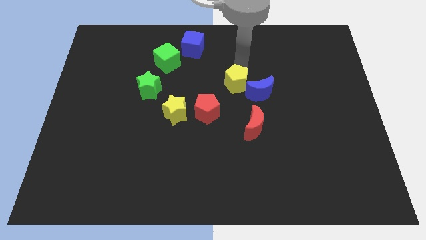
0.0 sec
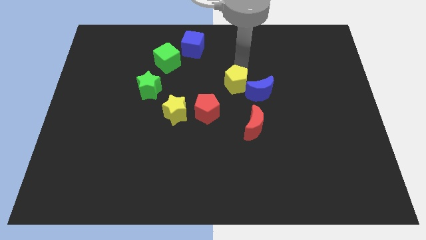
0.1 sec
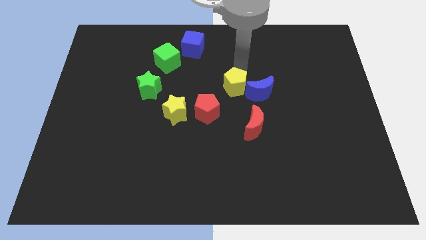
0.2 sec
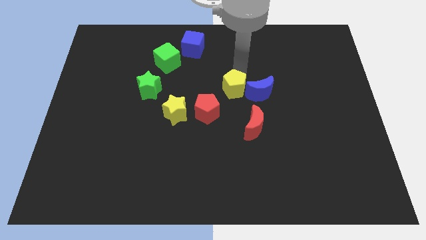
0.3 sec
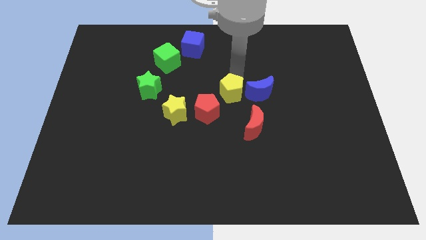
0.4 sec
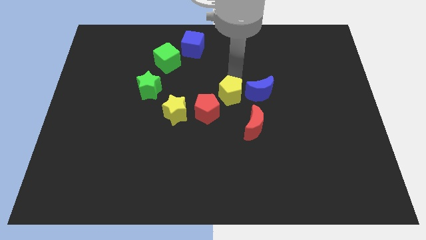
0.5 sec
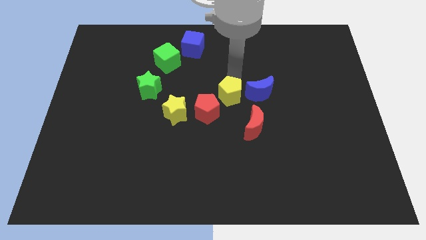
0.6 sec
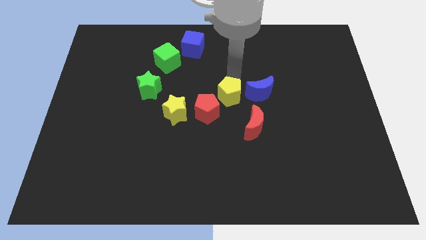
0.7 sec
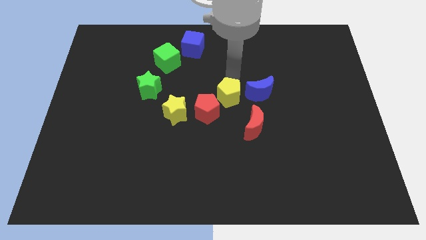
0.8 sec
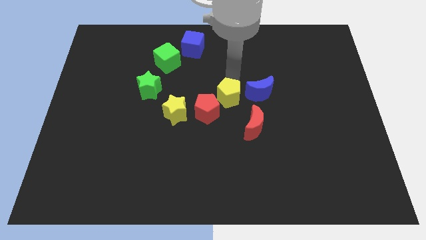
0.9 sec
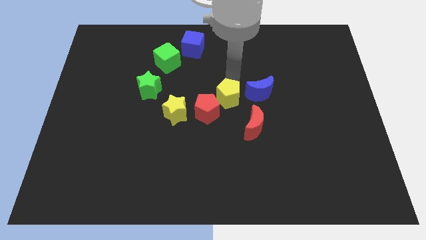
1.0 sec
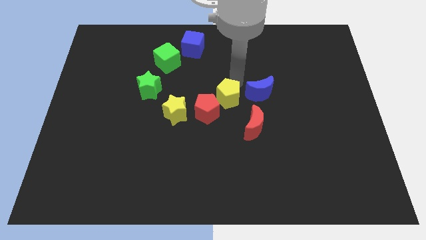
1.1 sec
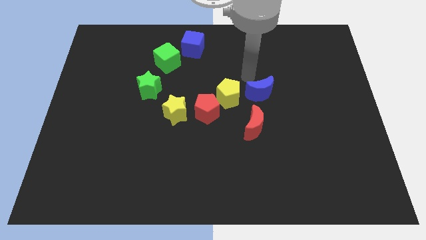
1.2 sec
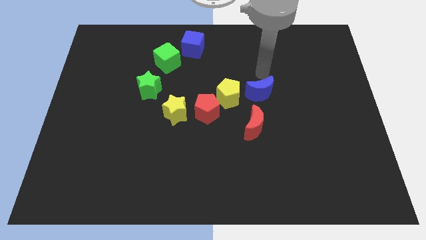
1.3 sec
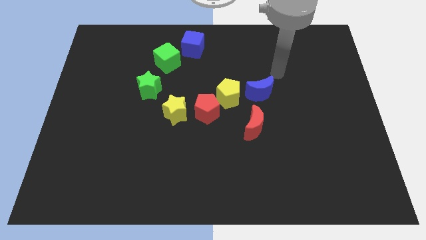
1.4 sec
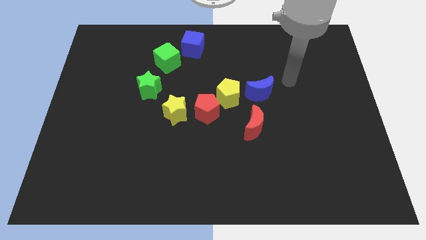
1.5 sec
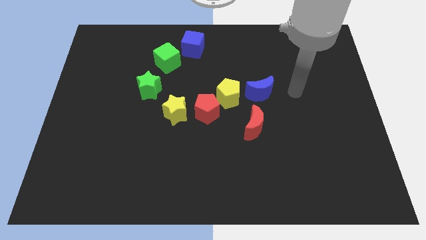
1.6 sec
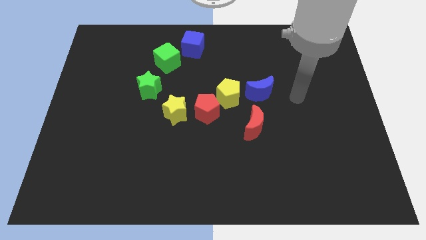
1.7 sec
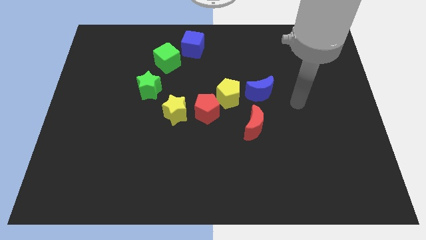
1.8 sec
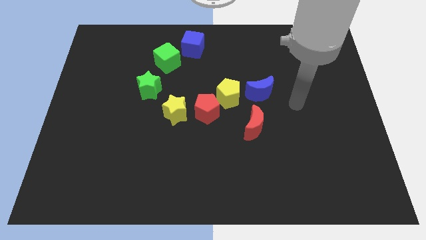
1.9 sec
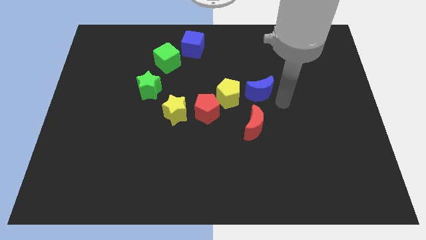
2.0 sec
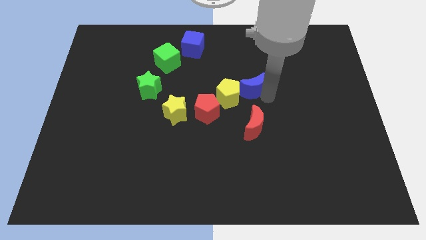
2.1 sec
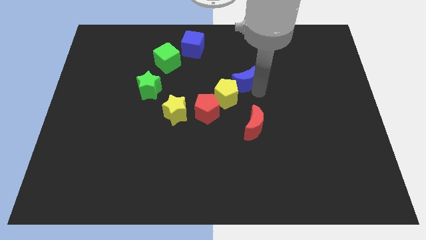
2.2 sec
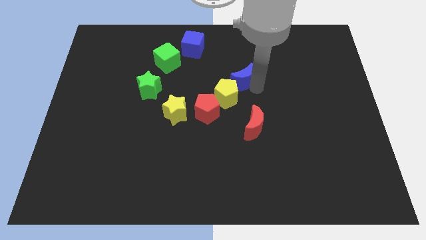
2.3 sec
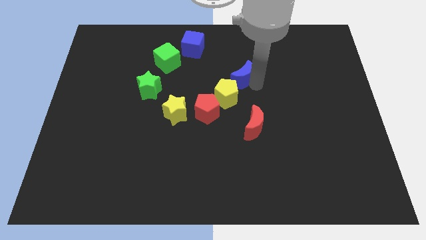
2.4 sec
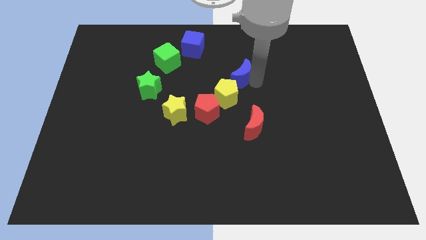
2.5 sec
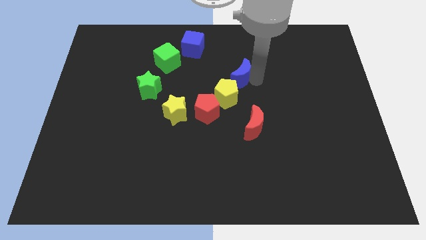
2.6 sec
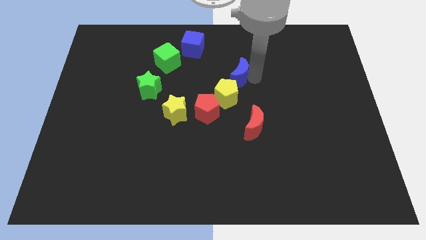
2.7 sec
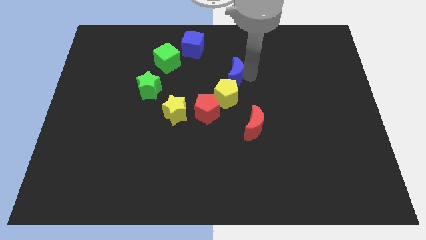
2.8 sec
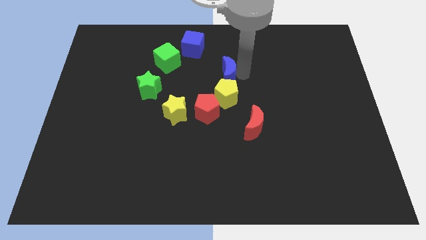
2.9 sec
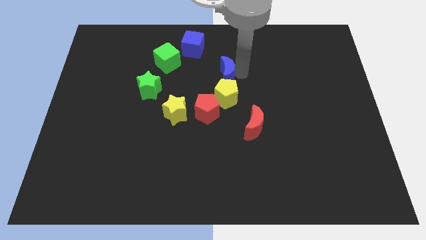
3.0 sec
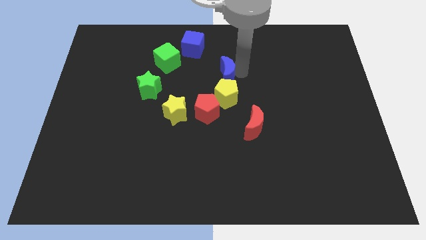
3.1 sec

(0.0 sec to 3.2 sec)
move yellow pentagon to the upper right side of the red pentagon

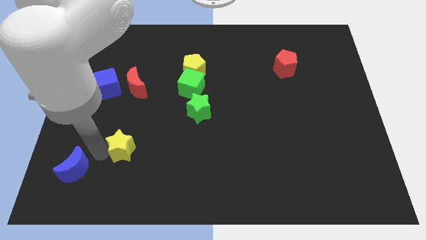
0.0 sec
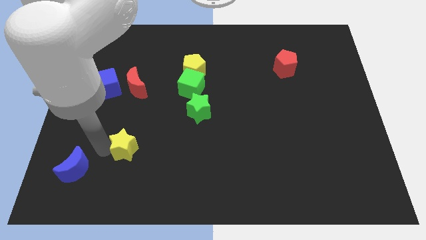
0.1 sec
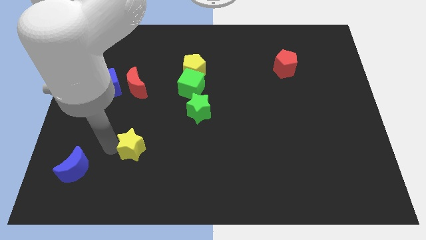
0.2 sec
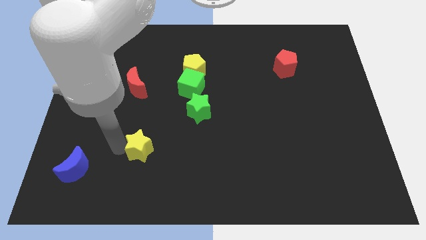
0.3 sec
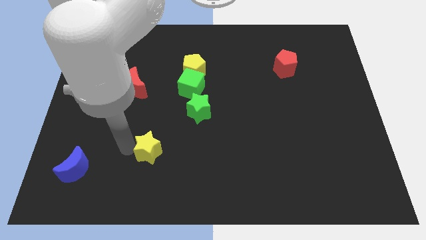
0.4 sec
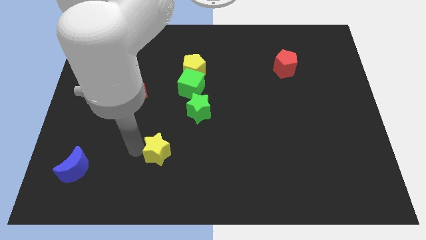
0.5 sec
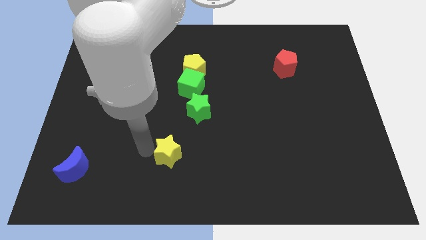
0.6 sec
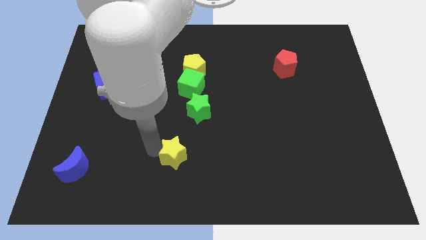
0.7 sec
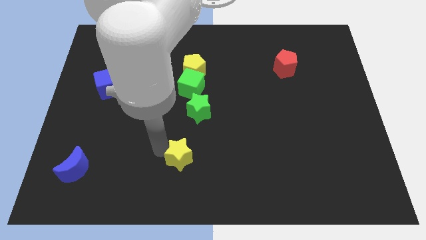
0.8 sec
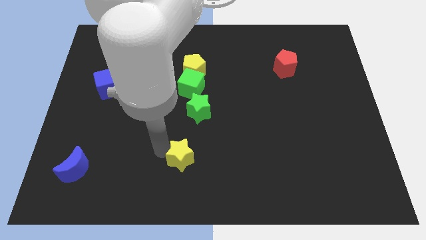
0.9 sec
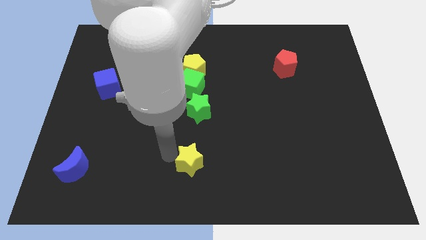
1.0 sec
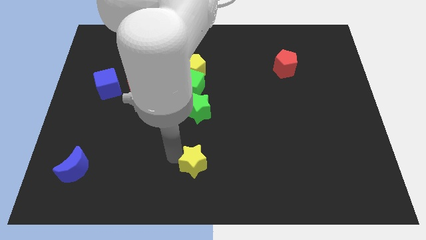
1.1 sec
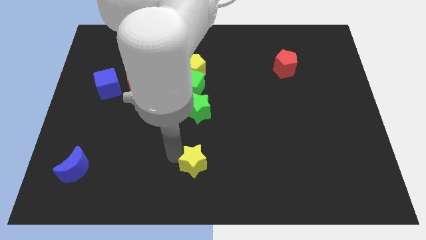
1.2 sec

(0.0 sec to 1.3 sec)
place yellow star to the bottom of the green star

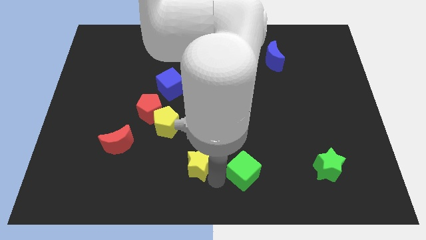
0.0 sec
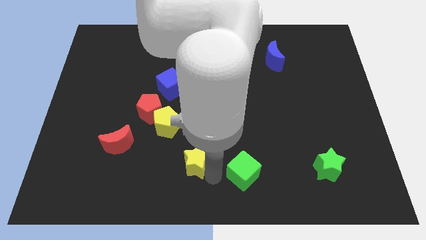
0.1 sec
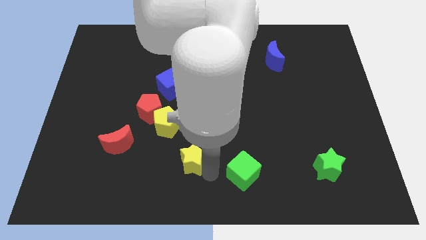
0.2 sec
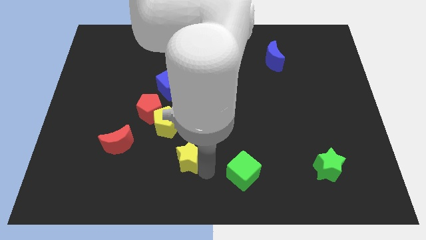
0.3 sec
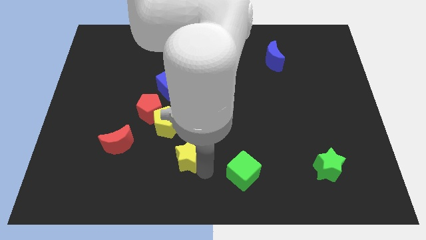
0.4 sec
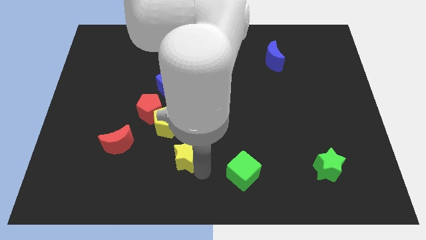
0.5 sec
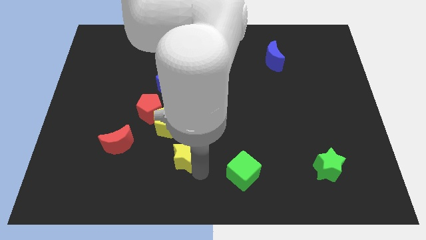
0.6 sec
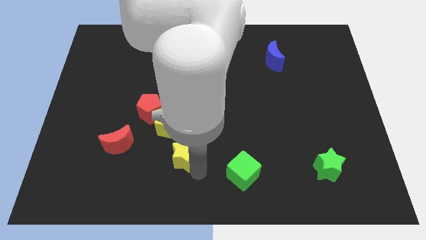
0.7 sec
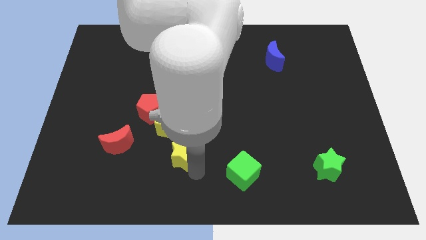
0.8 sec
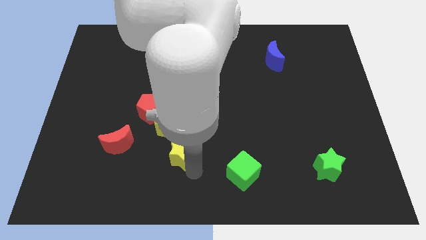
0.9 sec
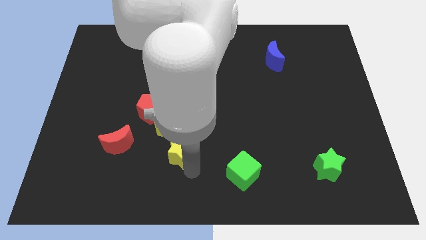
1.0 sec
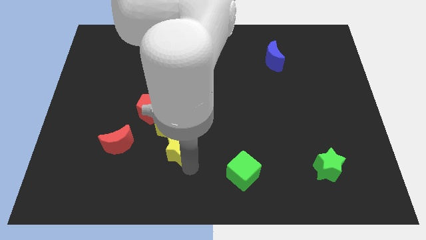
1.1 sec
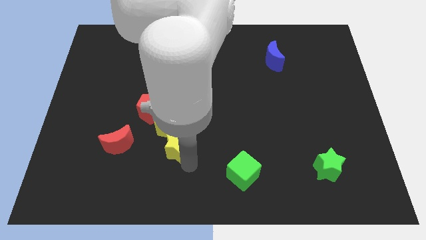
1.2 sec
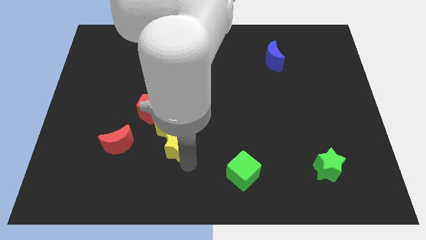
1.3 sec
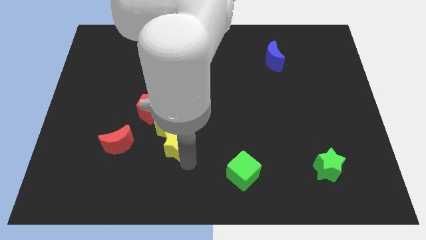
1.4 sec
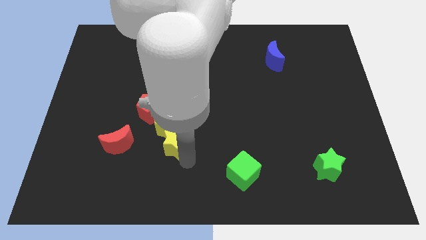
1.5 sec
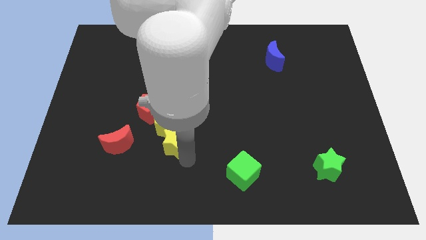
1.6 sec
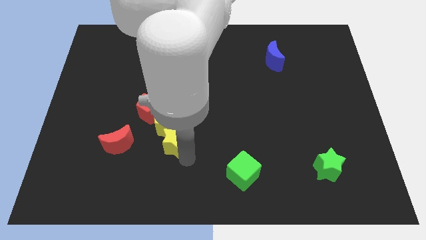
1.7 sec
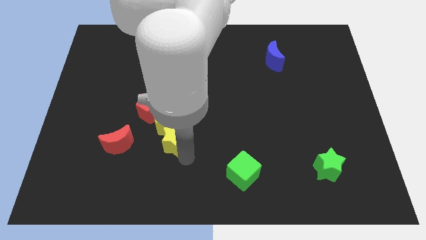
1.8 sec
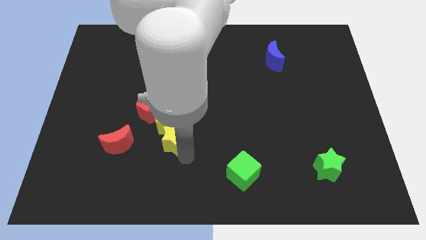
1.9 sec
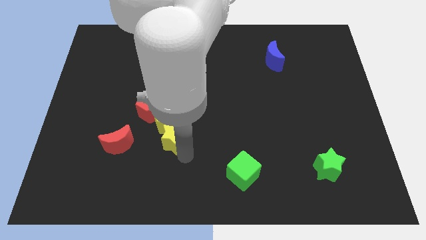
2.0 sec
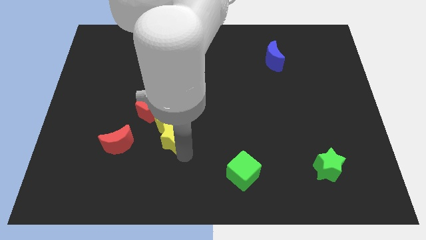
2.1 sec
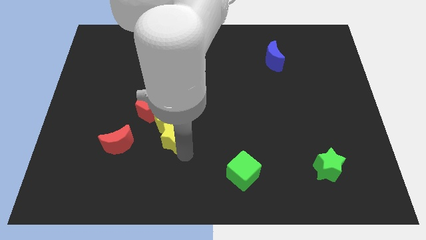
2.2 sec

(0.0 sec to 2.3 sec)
push the yellow star close to the yellow pentagon

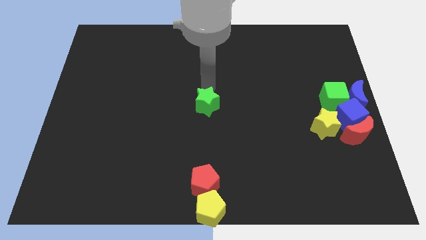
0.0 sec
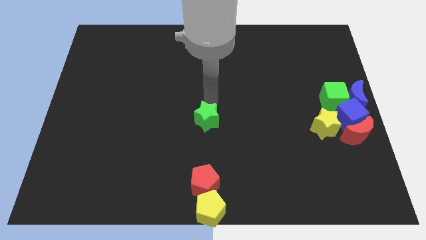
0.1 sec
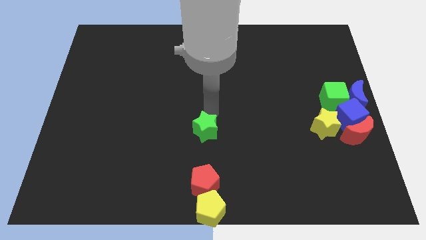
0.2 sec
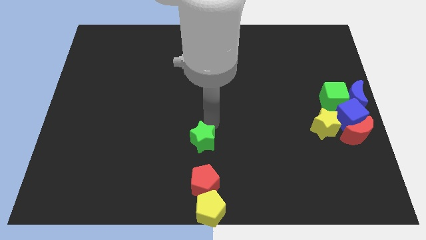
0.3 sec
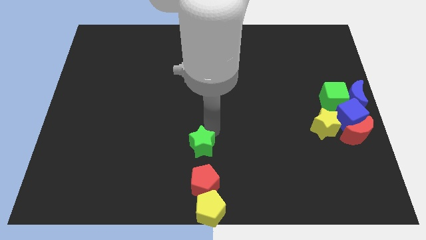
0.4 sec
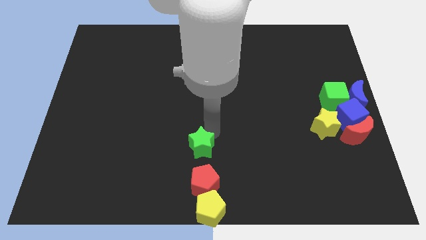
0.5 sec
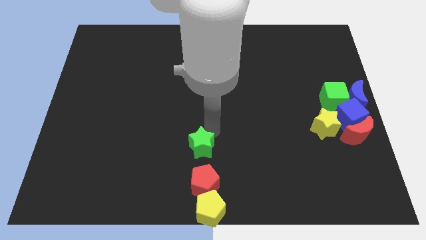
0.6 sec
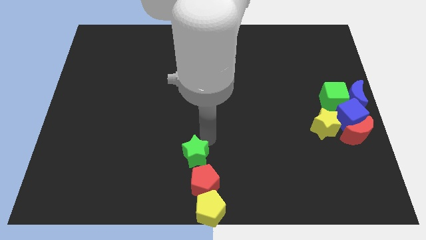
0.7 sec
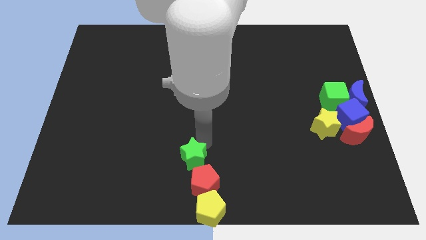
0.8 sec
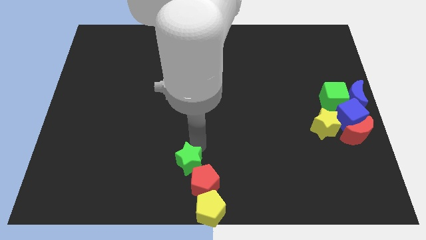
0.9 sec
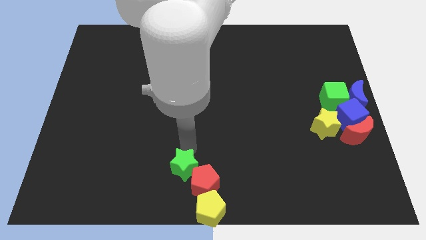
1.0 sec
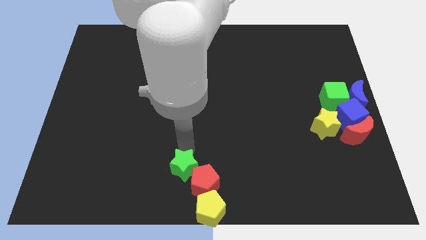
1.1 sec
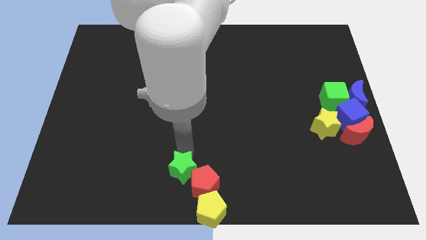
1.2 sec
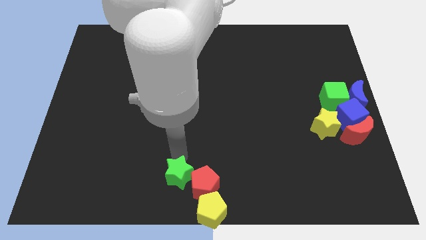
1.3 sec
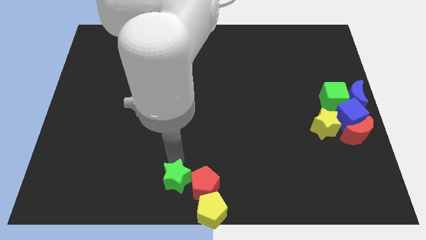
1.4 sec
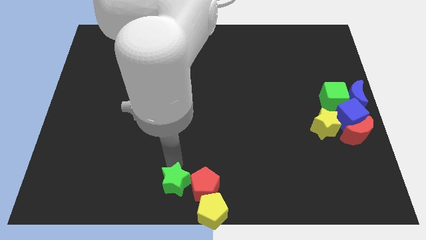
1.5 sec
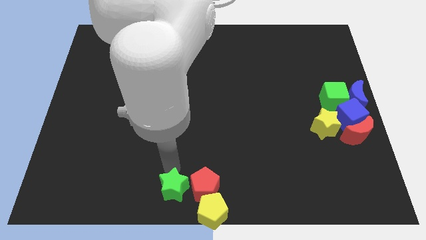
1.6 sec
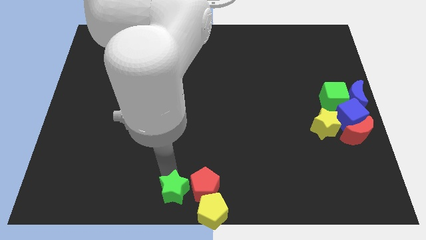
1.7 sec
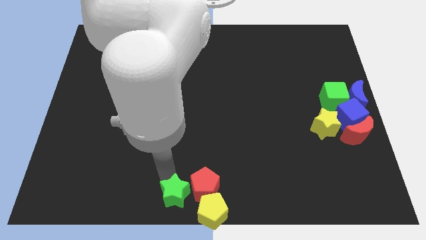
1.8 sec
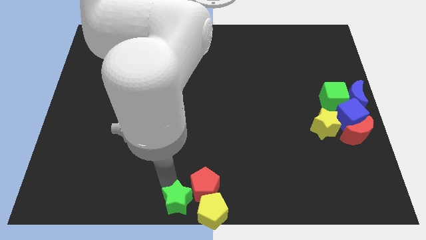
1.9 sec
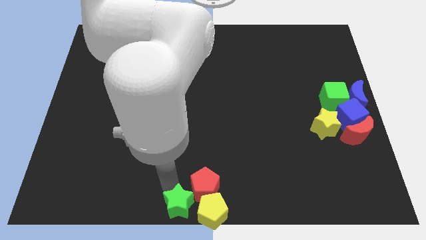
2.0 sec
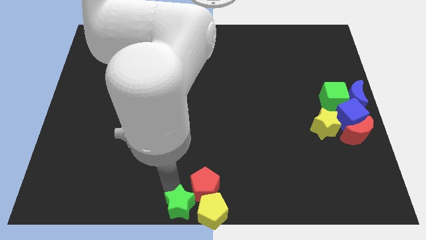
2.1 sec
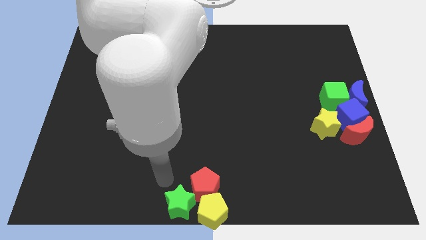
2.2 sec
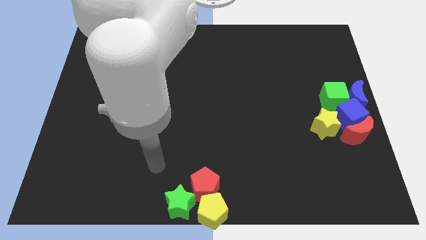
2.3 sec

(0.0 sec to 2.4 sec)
place green star beside yellow pentagon
